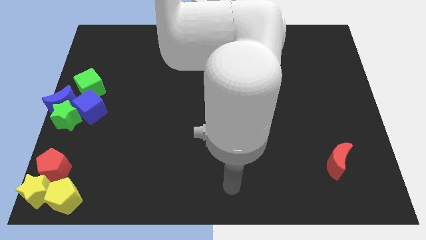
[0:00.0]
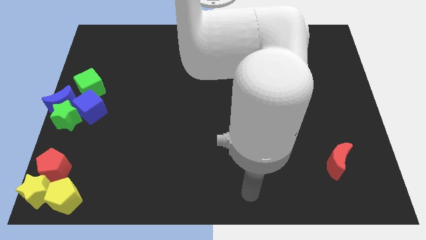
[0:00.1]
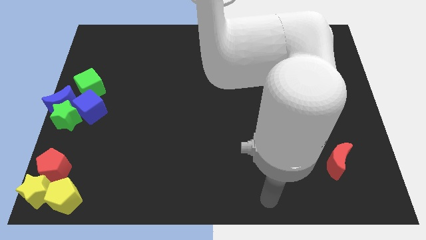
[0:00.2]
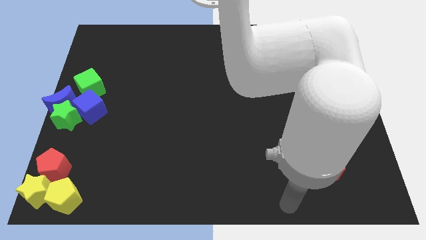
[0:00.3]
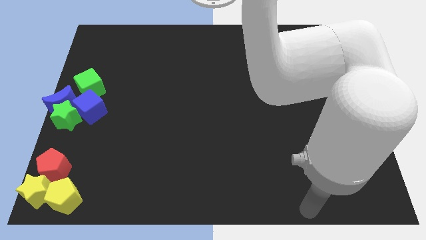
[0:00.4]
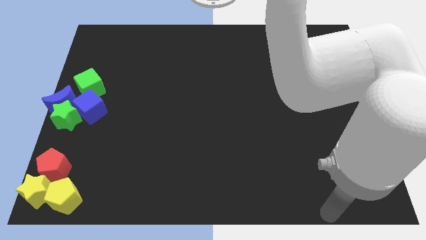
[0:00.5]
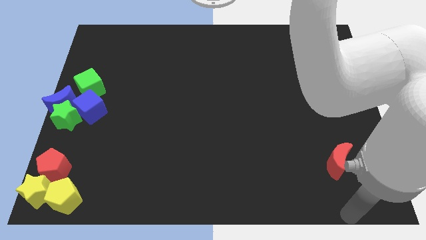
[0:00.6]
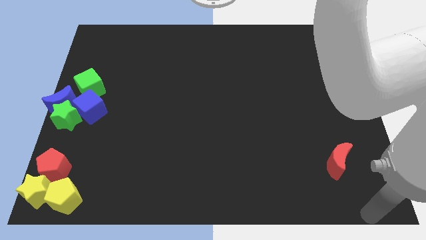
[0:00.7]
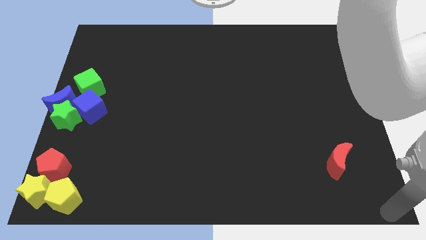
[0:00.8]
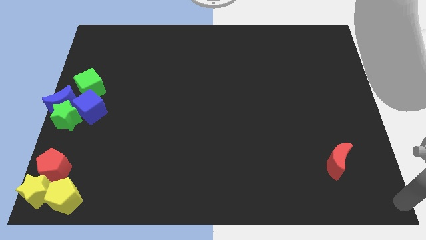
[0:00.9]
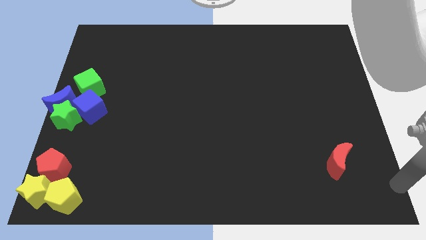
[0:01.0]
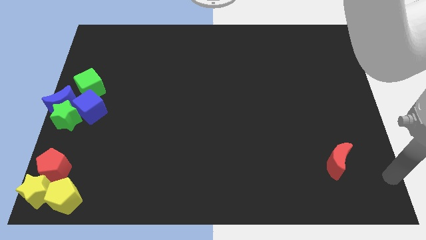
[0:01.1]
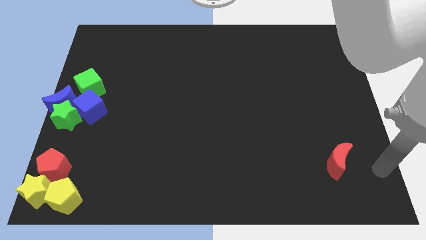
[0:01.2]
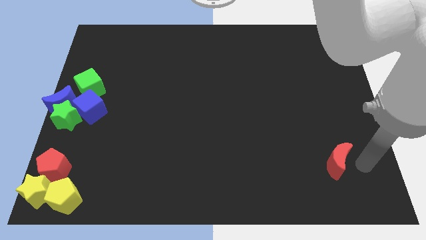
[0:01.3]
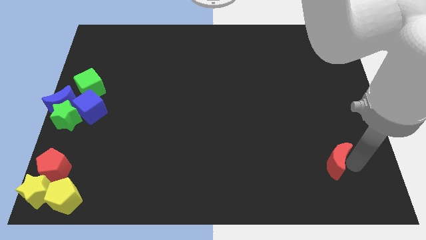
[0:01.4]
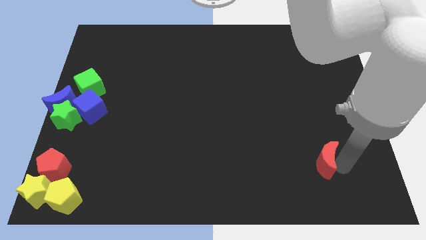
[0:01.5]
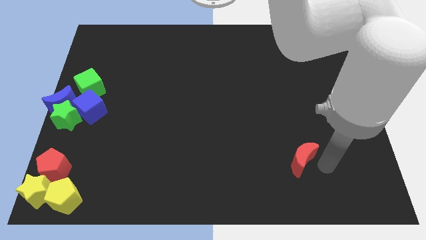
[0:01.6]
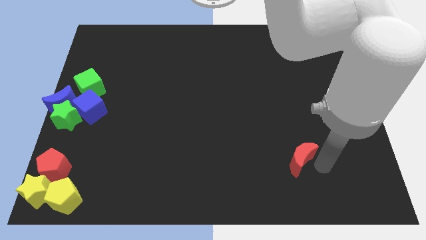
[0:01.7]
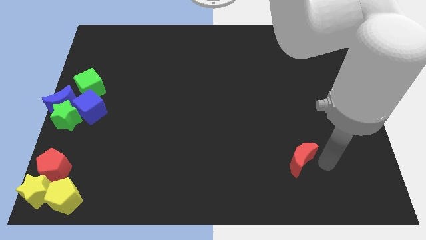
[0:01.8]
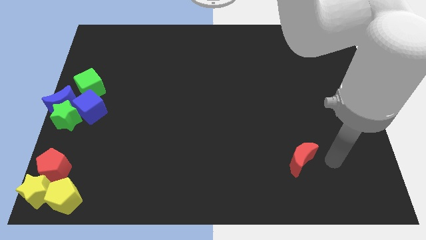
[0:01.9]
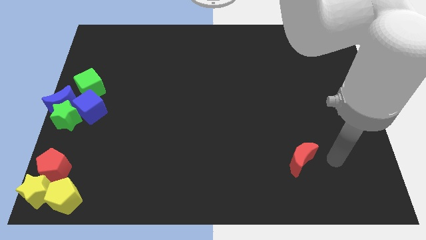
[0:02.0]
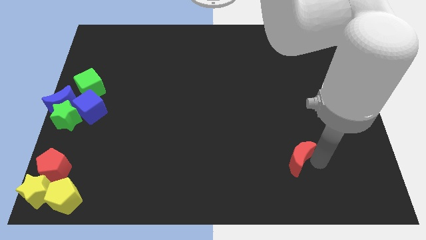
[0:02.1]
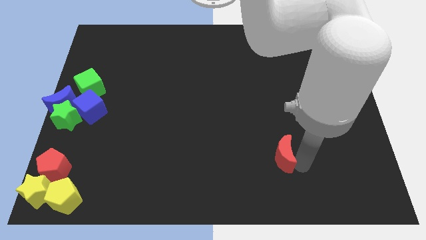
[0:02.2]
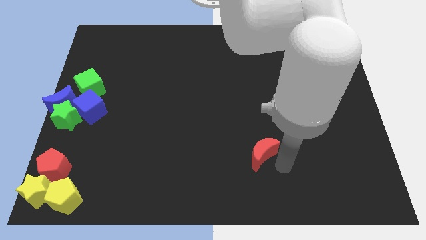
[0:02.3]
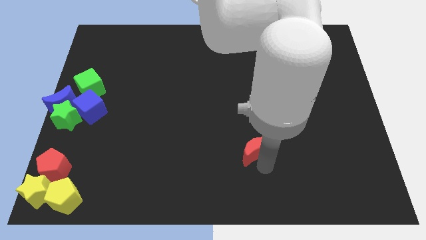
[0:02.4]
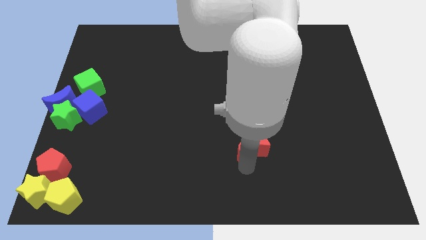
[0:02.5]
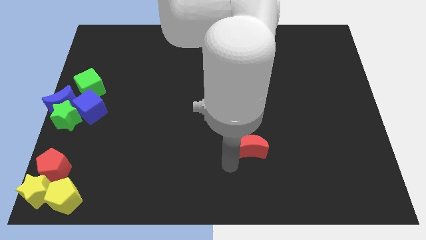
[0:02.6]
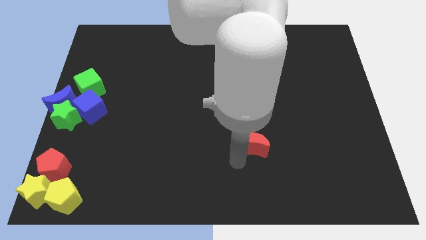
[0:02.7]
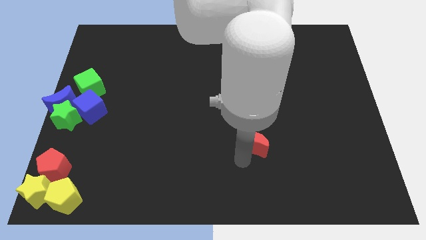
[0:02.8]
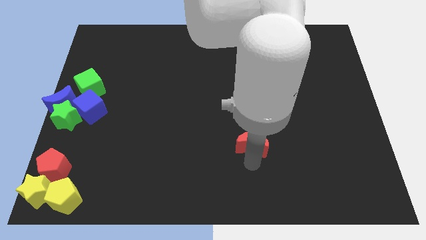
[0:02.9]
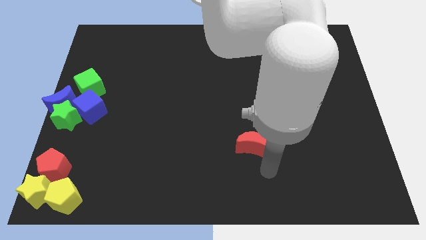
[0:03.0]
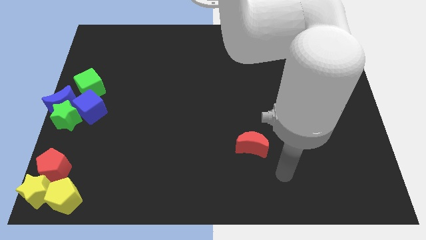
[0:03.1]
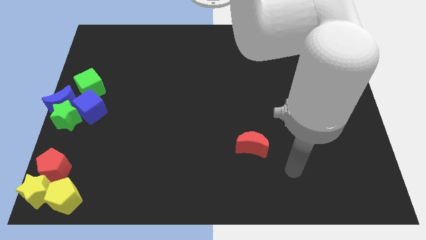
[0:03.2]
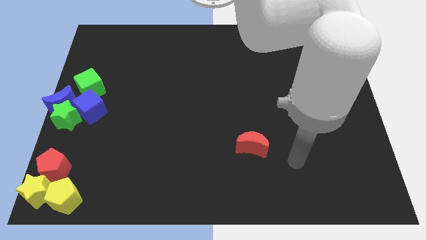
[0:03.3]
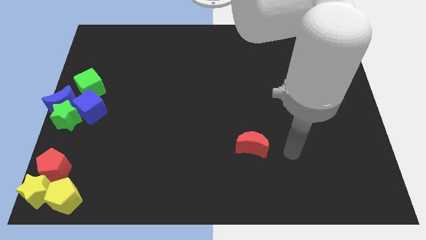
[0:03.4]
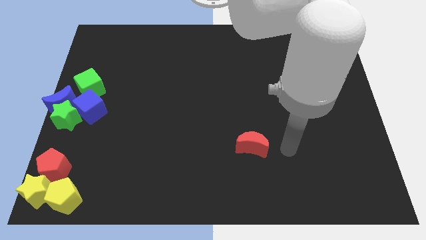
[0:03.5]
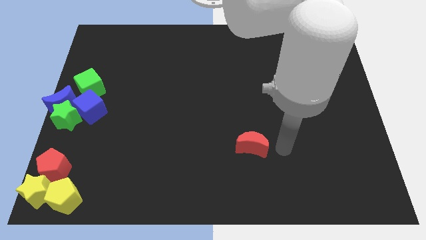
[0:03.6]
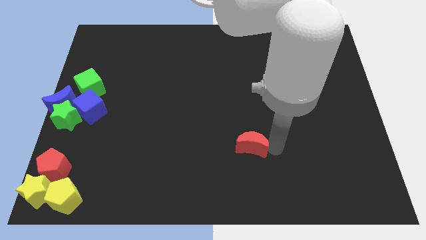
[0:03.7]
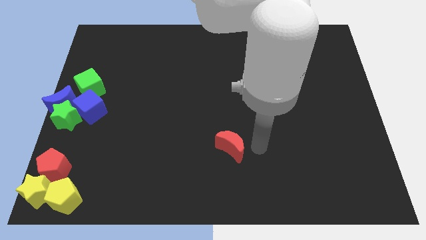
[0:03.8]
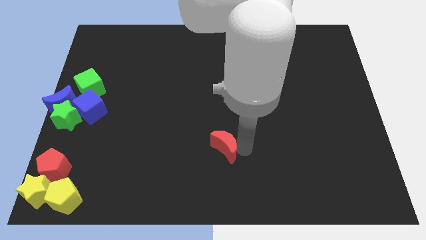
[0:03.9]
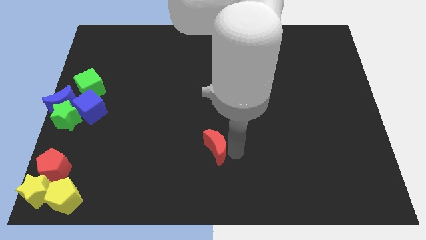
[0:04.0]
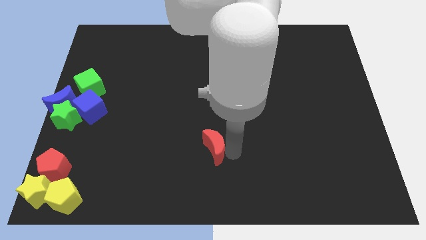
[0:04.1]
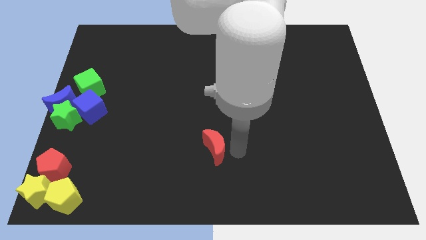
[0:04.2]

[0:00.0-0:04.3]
drag the red crescent towards the left side of the board

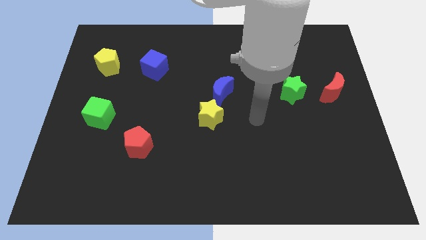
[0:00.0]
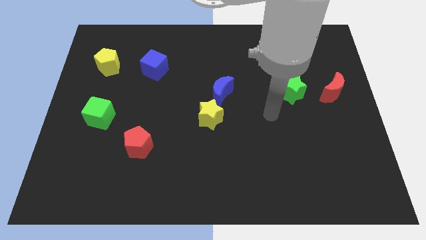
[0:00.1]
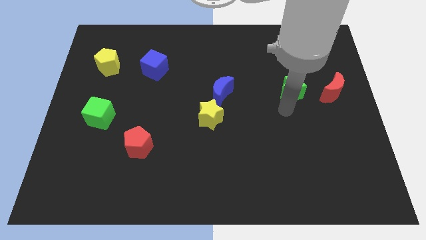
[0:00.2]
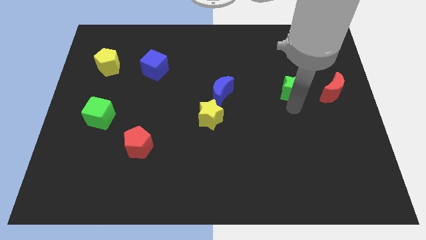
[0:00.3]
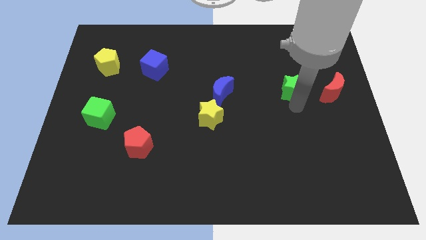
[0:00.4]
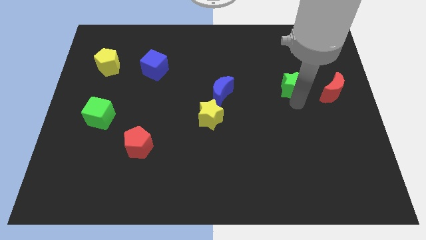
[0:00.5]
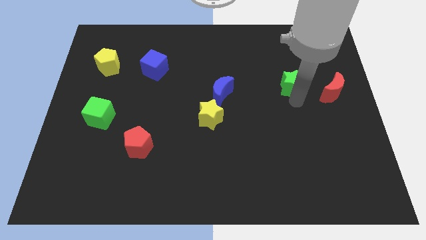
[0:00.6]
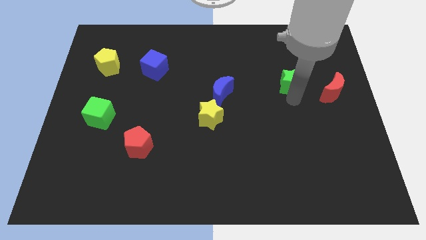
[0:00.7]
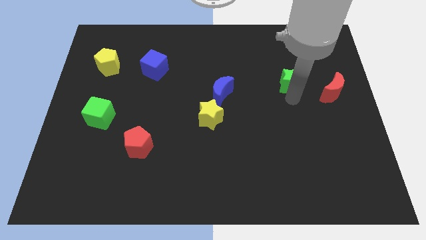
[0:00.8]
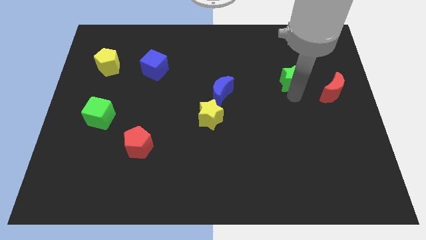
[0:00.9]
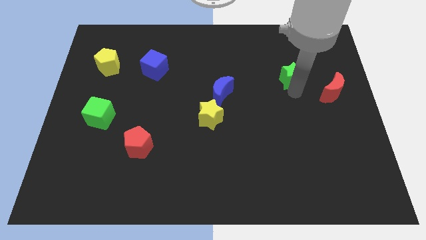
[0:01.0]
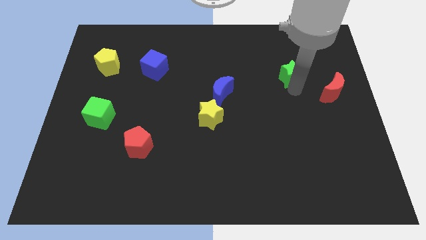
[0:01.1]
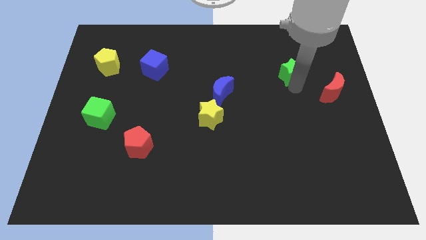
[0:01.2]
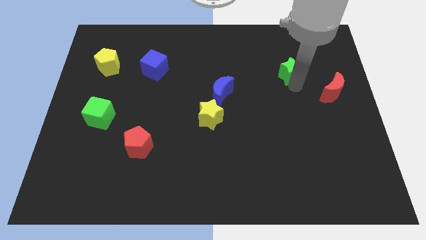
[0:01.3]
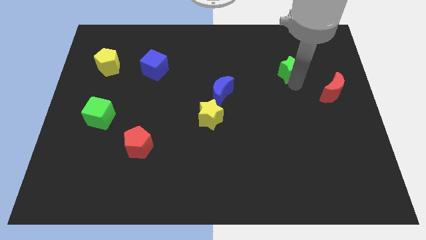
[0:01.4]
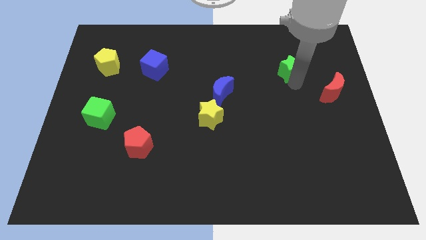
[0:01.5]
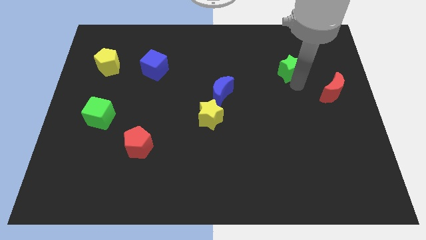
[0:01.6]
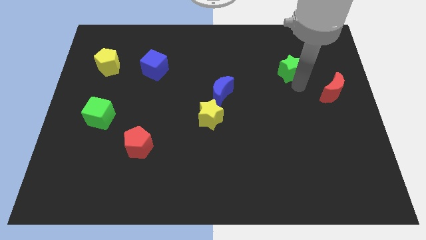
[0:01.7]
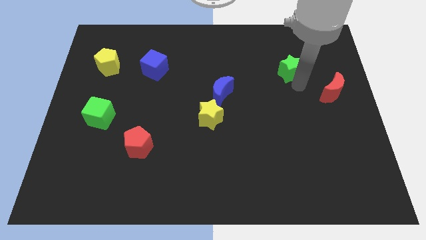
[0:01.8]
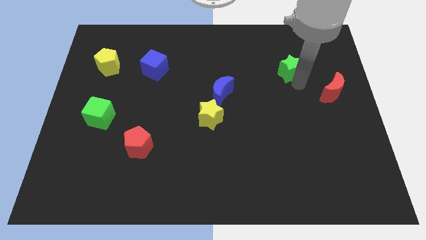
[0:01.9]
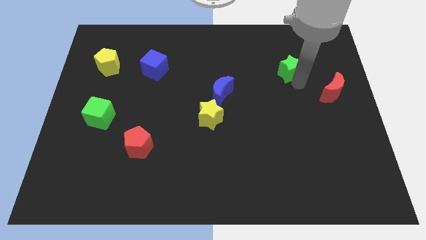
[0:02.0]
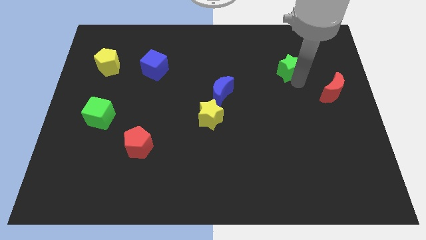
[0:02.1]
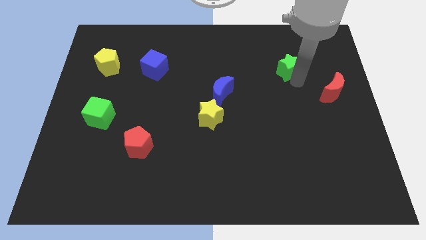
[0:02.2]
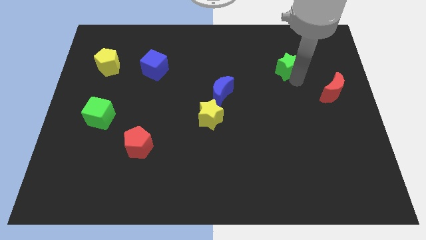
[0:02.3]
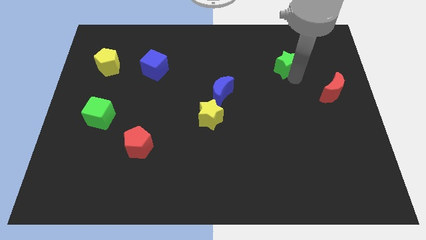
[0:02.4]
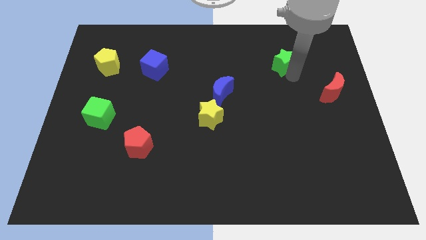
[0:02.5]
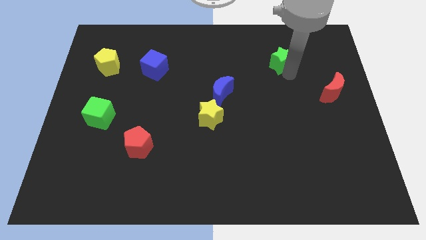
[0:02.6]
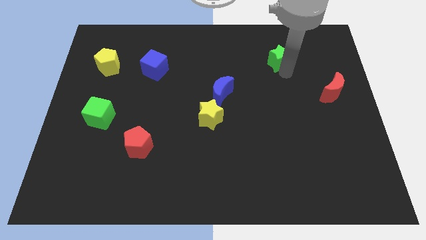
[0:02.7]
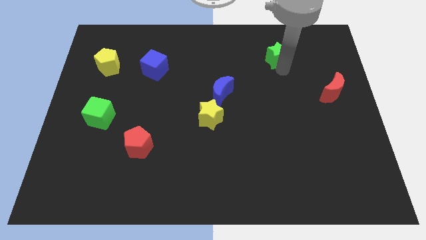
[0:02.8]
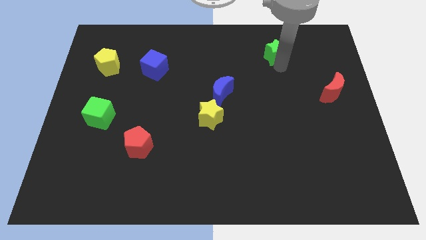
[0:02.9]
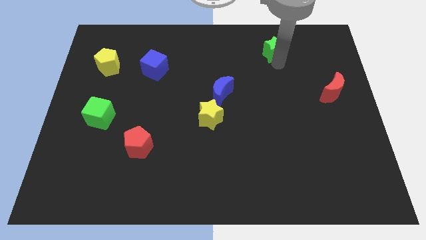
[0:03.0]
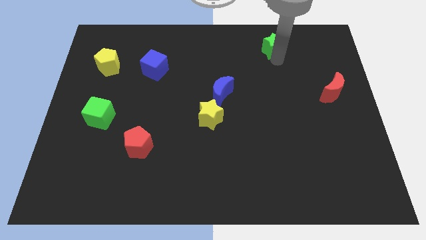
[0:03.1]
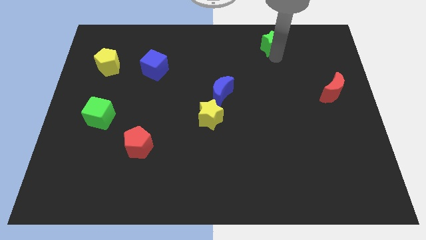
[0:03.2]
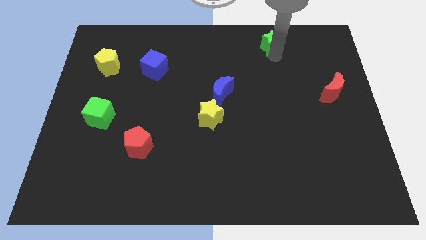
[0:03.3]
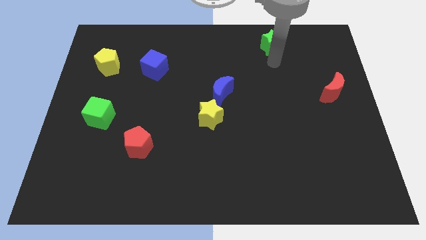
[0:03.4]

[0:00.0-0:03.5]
place a green star on the top of the board

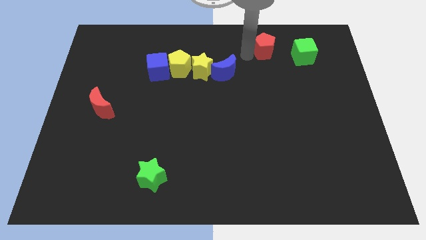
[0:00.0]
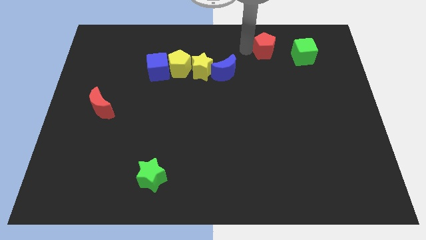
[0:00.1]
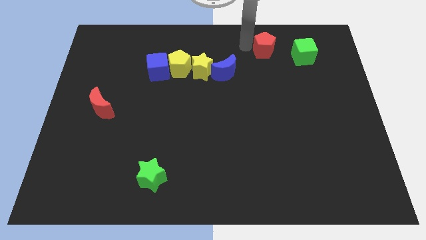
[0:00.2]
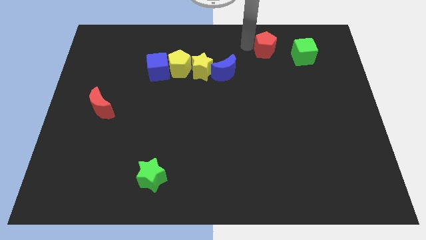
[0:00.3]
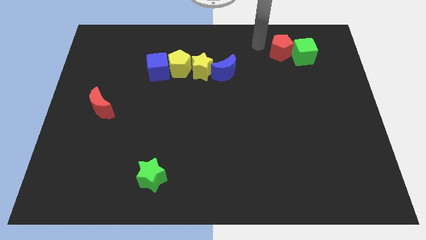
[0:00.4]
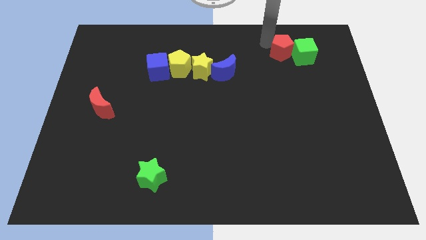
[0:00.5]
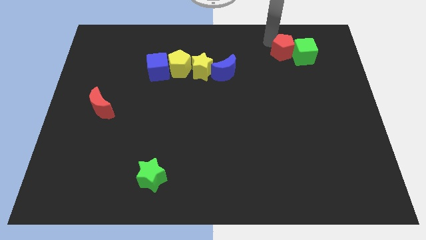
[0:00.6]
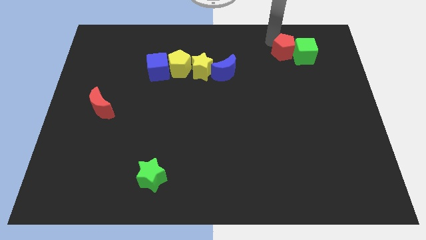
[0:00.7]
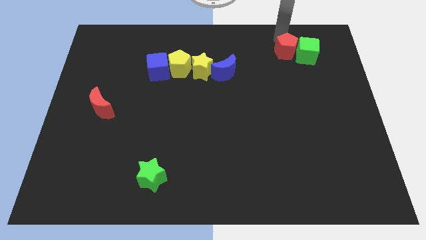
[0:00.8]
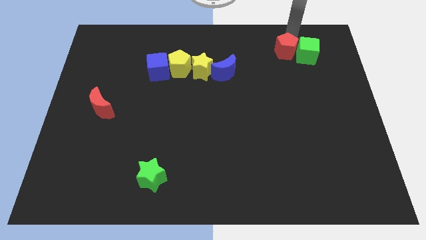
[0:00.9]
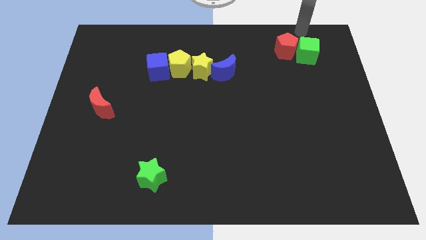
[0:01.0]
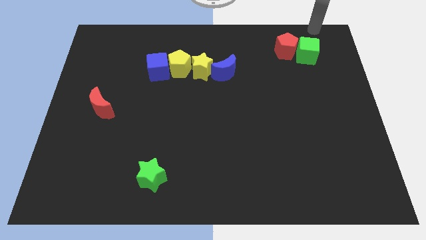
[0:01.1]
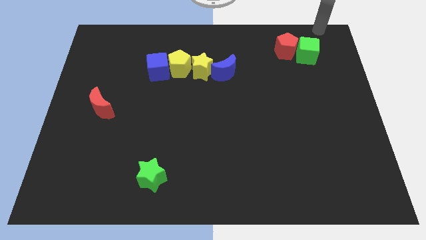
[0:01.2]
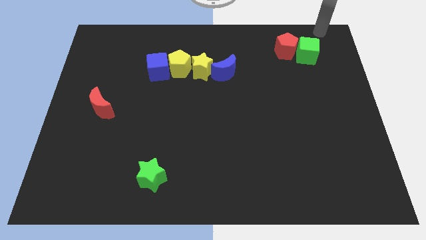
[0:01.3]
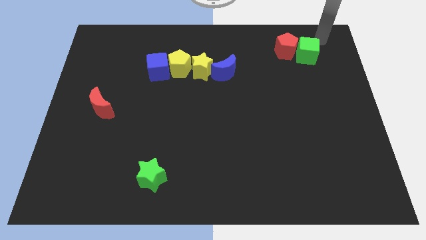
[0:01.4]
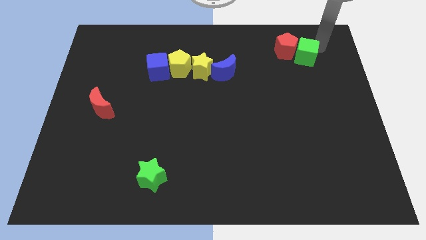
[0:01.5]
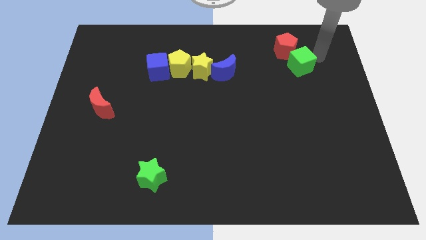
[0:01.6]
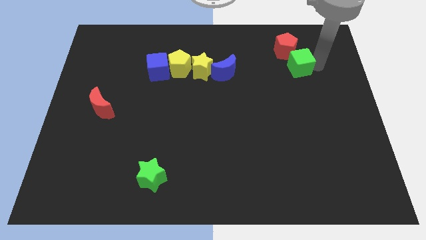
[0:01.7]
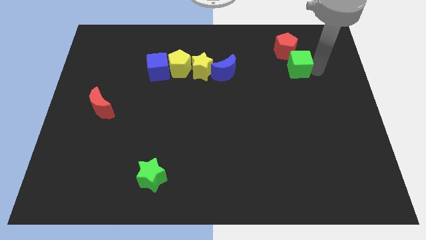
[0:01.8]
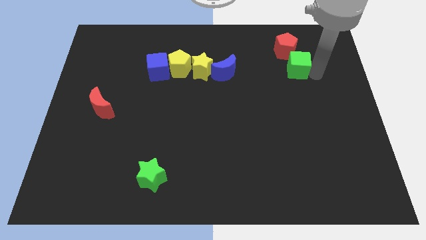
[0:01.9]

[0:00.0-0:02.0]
push the red pentagon close to the green cube
